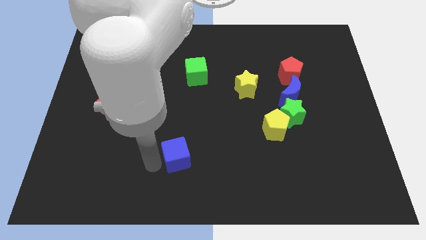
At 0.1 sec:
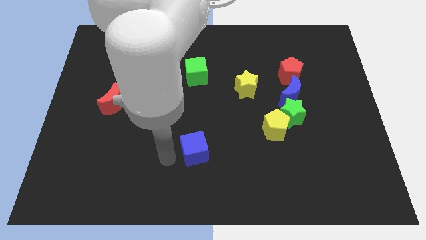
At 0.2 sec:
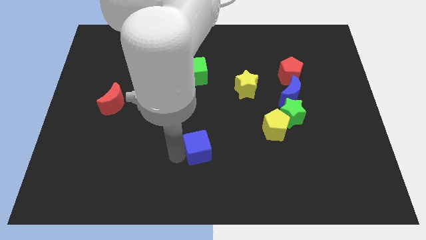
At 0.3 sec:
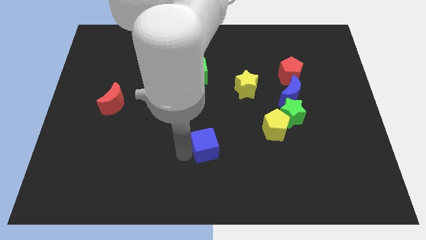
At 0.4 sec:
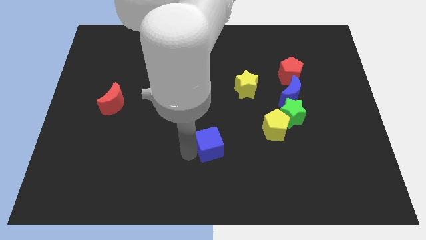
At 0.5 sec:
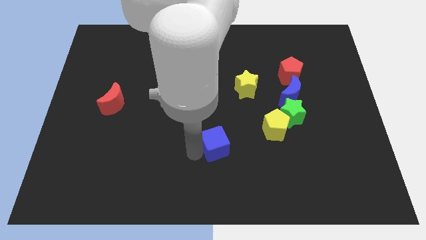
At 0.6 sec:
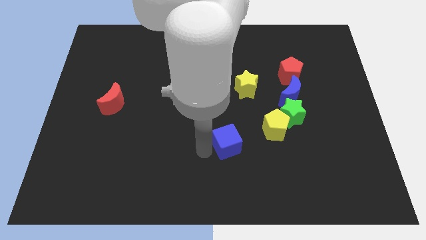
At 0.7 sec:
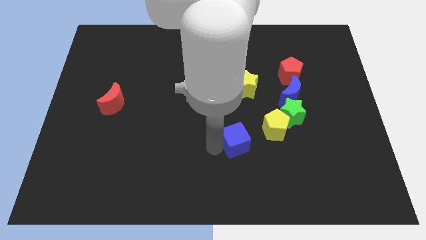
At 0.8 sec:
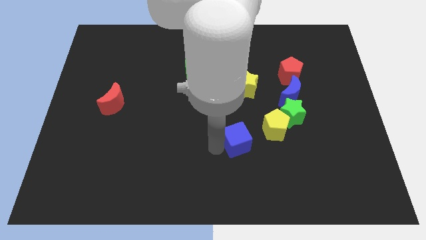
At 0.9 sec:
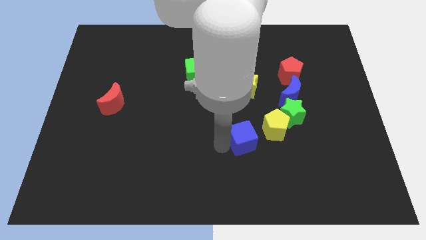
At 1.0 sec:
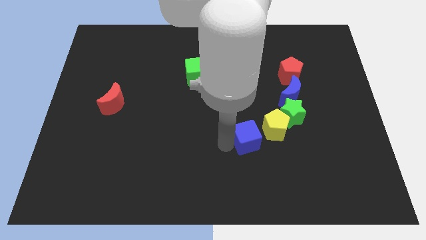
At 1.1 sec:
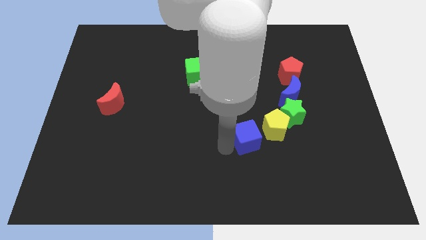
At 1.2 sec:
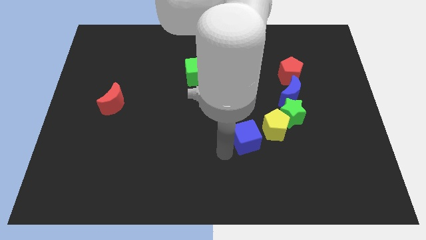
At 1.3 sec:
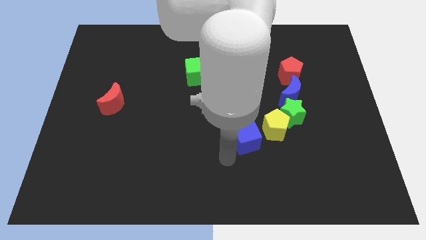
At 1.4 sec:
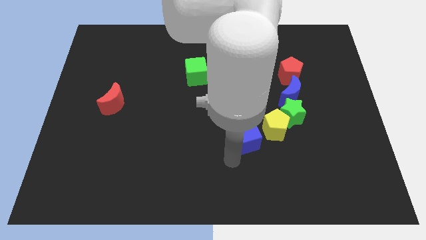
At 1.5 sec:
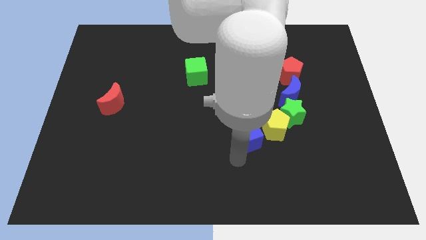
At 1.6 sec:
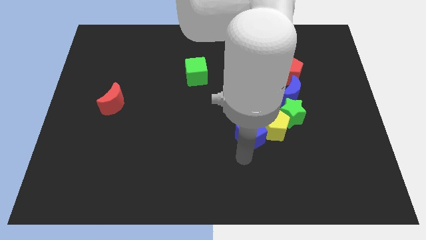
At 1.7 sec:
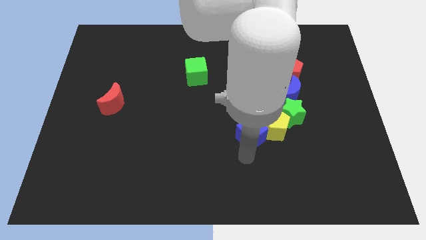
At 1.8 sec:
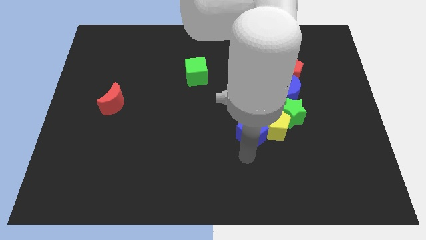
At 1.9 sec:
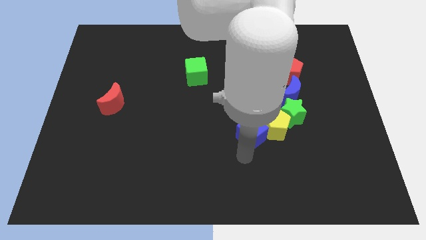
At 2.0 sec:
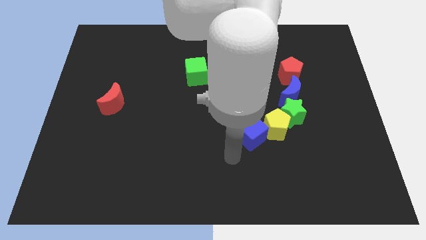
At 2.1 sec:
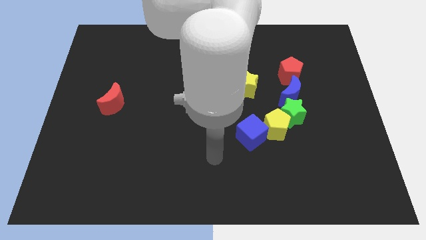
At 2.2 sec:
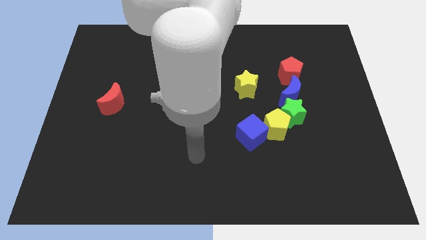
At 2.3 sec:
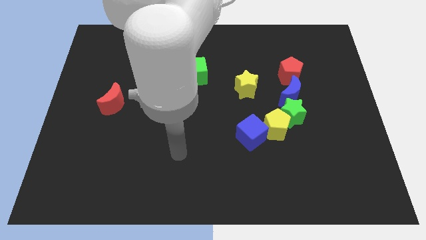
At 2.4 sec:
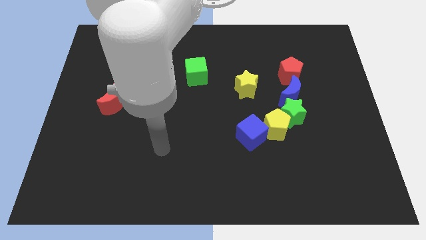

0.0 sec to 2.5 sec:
place the blue cube near to the yellow pentagon

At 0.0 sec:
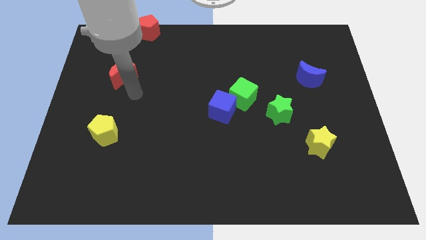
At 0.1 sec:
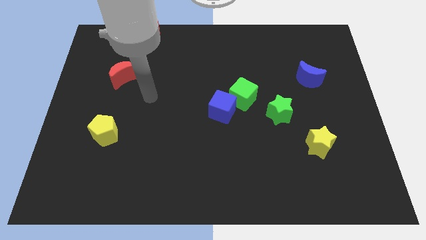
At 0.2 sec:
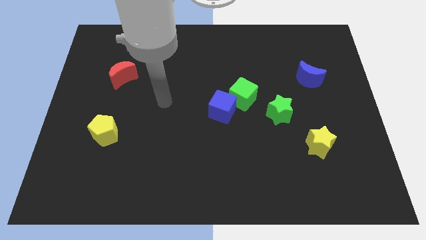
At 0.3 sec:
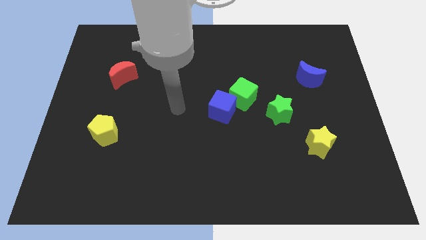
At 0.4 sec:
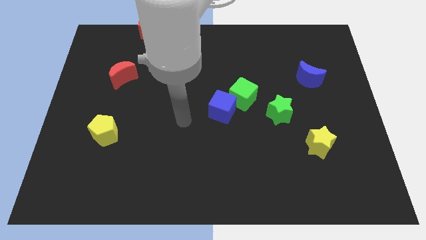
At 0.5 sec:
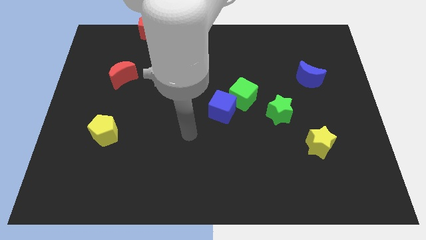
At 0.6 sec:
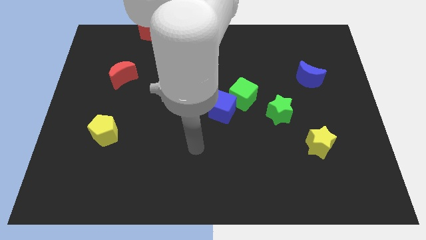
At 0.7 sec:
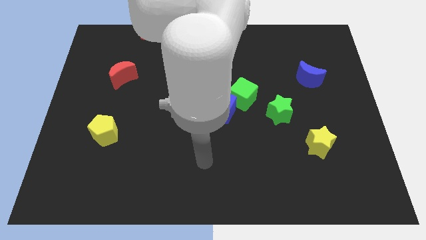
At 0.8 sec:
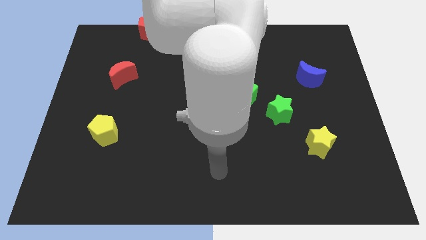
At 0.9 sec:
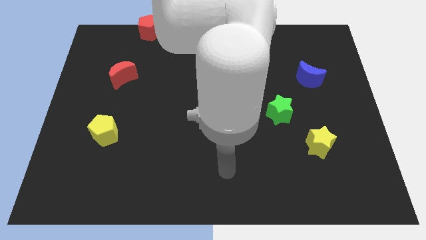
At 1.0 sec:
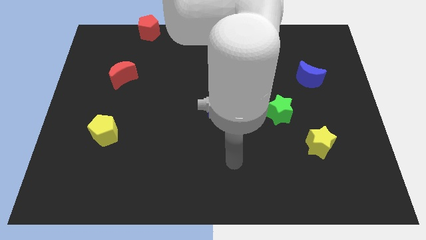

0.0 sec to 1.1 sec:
move the arm away from the red moon

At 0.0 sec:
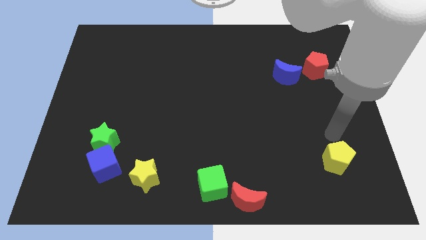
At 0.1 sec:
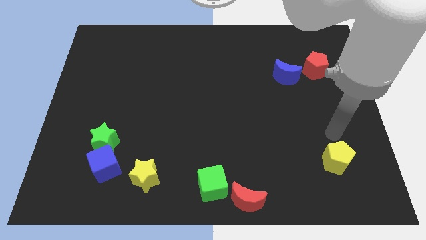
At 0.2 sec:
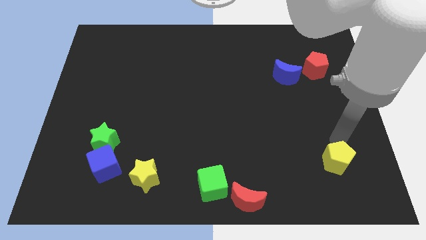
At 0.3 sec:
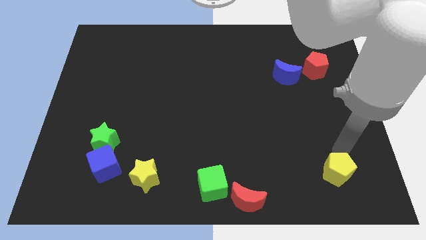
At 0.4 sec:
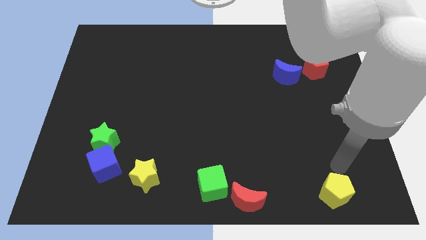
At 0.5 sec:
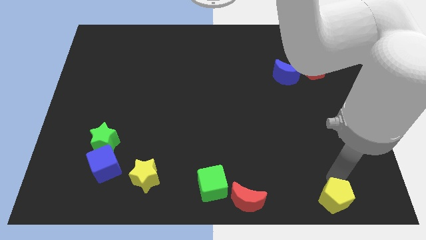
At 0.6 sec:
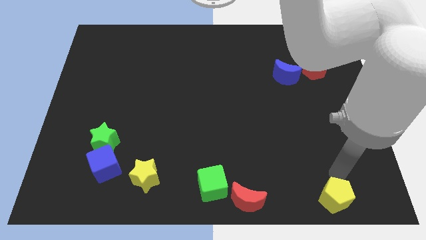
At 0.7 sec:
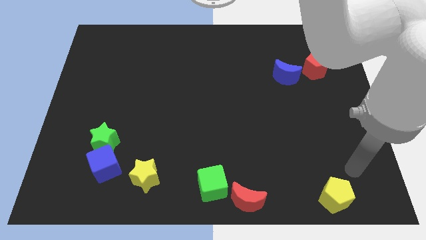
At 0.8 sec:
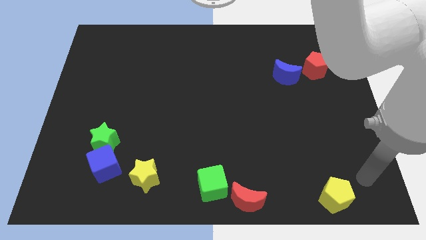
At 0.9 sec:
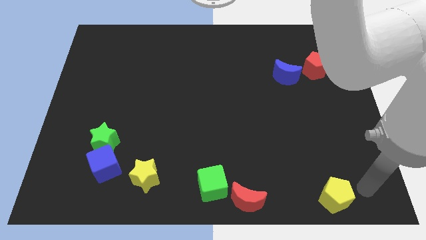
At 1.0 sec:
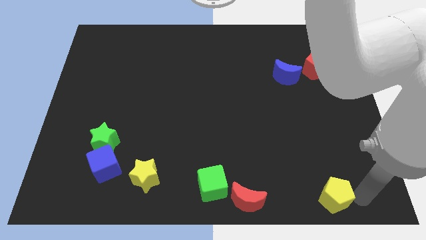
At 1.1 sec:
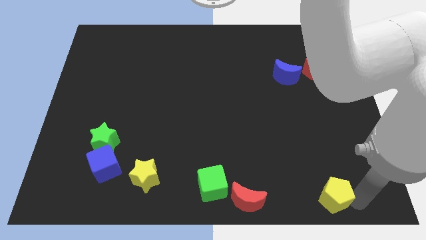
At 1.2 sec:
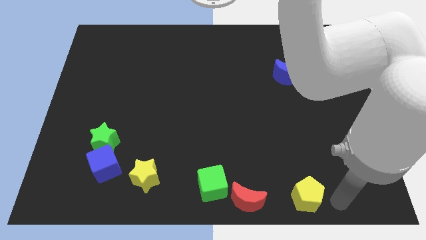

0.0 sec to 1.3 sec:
place yellow pentagon parallel right to red moon

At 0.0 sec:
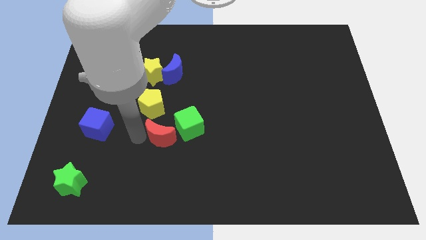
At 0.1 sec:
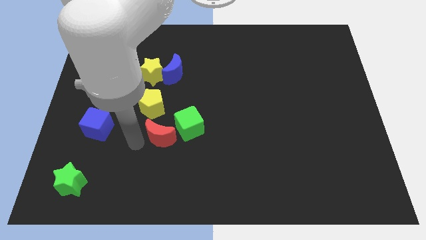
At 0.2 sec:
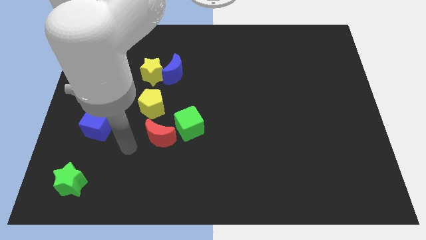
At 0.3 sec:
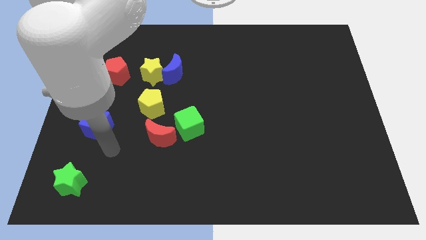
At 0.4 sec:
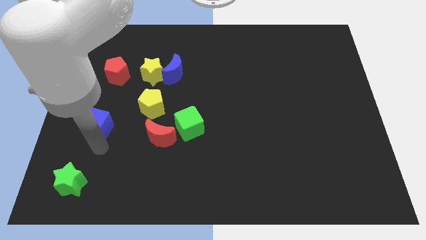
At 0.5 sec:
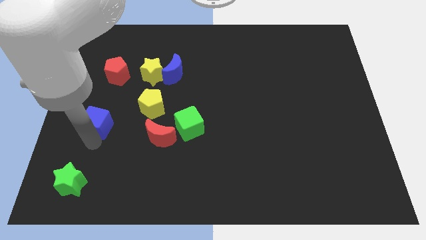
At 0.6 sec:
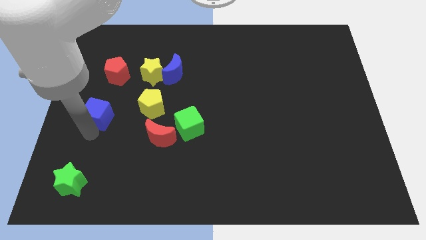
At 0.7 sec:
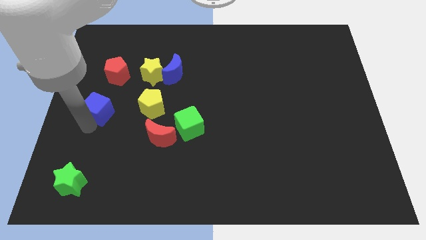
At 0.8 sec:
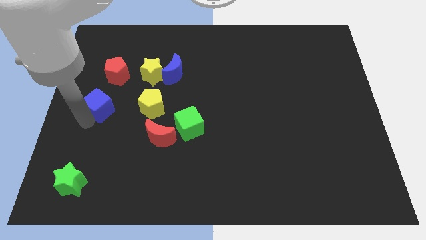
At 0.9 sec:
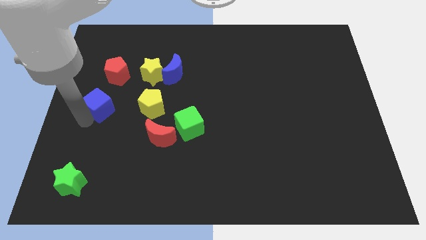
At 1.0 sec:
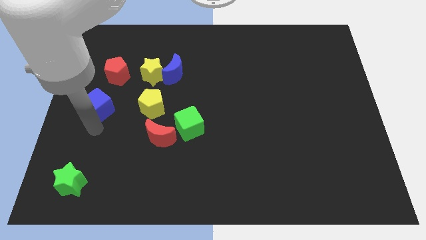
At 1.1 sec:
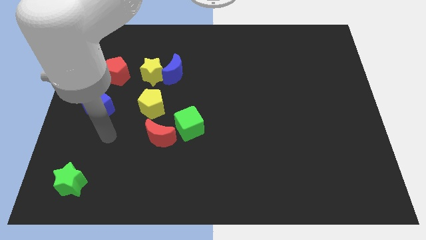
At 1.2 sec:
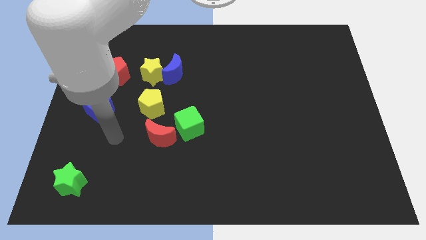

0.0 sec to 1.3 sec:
push the blue cube slightly towards up

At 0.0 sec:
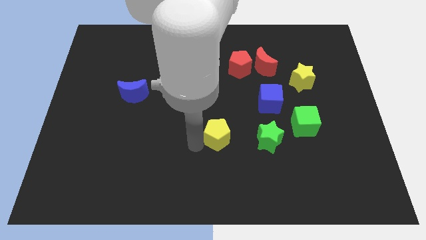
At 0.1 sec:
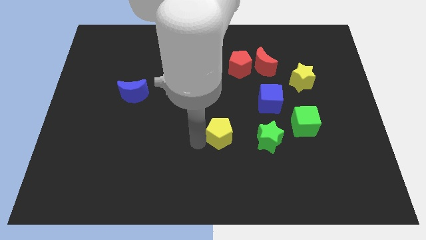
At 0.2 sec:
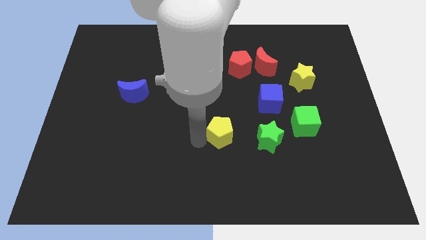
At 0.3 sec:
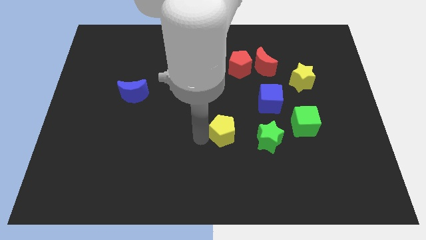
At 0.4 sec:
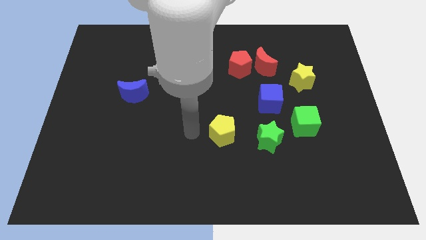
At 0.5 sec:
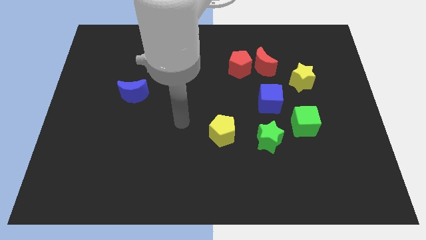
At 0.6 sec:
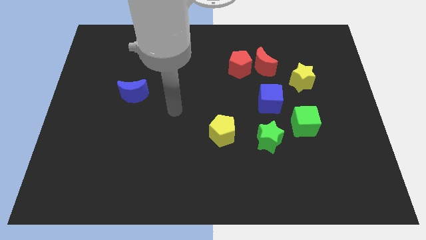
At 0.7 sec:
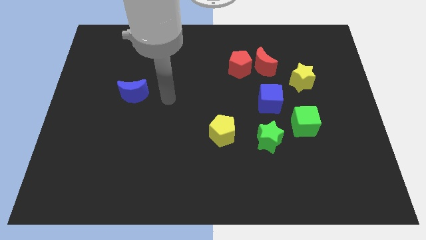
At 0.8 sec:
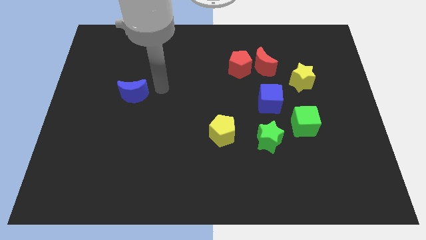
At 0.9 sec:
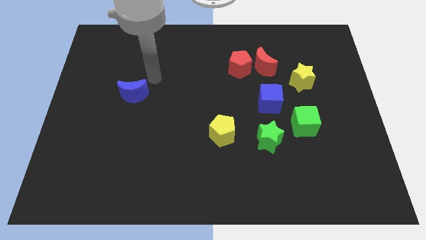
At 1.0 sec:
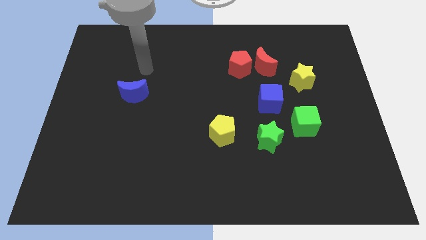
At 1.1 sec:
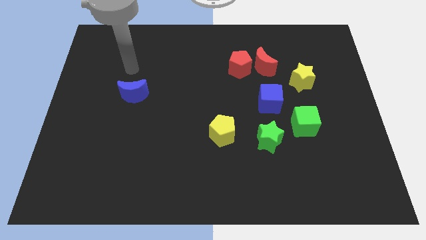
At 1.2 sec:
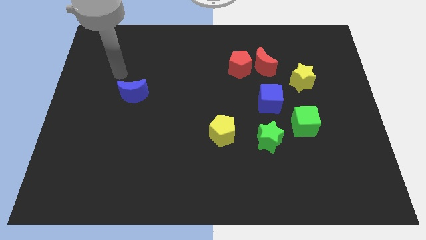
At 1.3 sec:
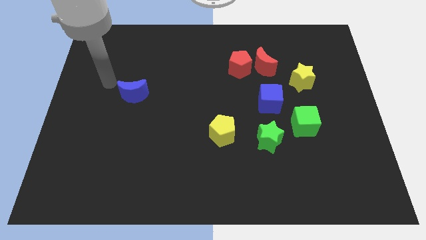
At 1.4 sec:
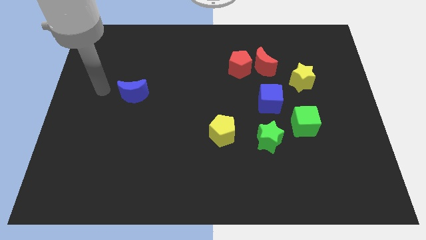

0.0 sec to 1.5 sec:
move arm to the blue moon

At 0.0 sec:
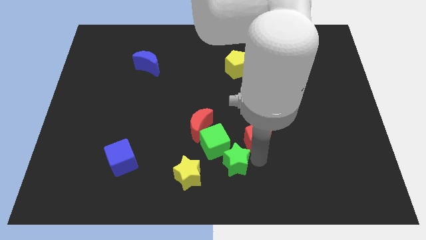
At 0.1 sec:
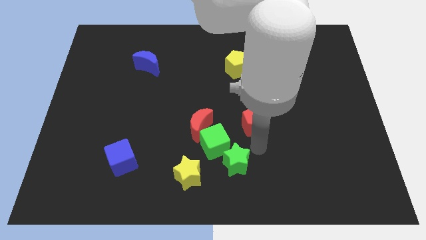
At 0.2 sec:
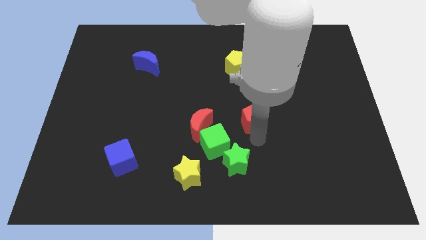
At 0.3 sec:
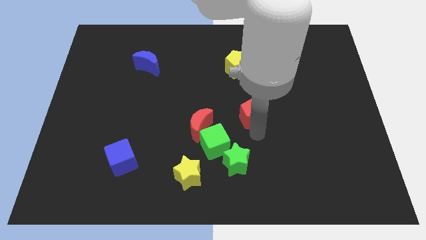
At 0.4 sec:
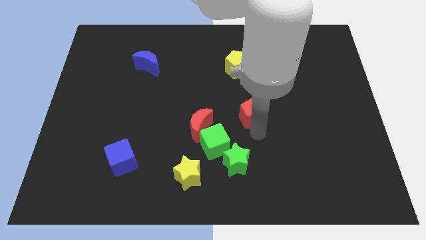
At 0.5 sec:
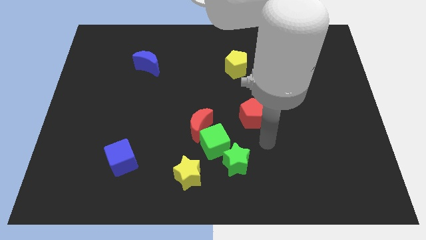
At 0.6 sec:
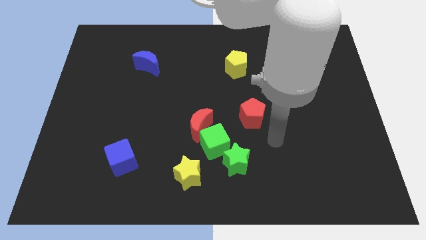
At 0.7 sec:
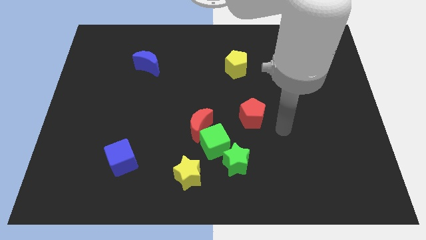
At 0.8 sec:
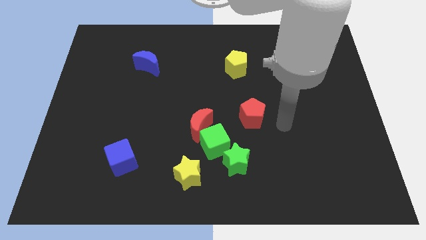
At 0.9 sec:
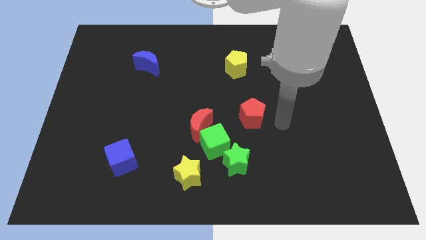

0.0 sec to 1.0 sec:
slide the red pentagon up slightly

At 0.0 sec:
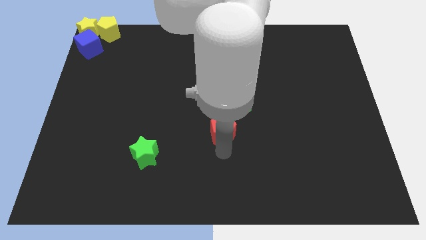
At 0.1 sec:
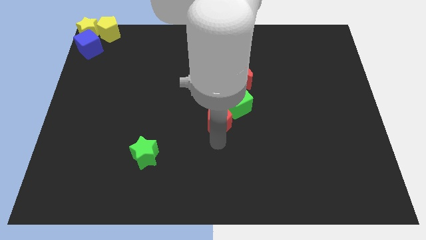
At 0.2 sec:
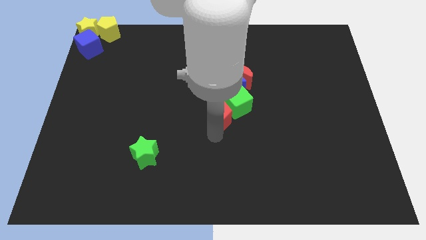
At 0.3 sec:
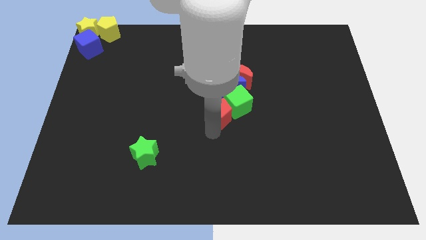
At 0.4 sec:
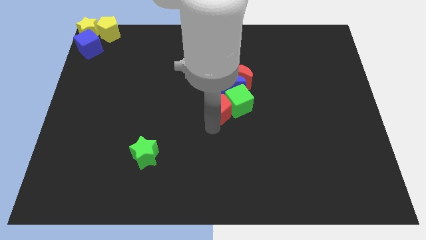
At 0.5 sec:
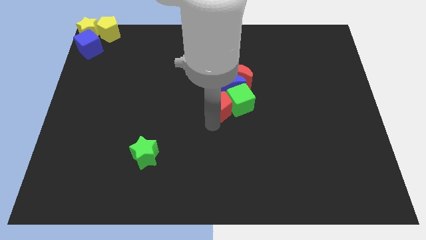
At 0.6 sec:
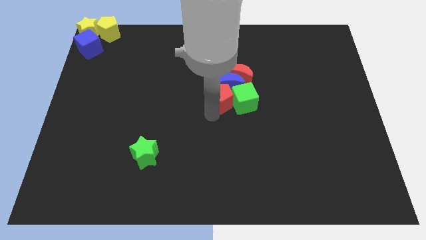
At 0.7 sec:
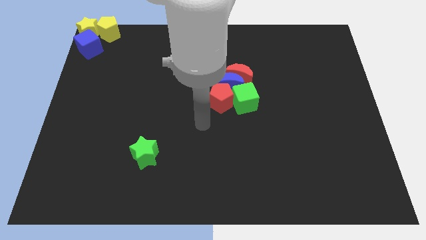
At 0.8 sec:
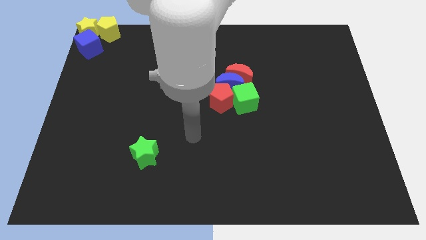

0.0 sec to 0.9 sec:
push red pentagon into blue moon
